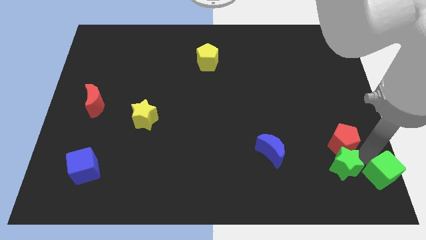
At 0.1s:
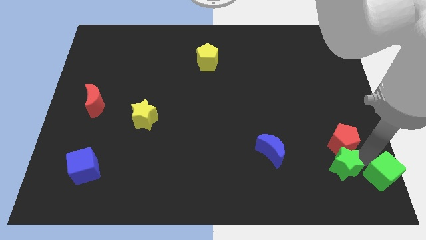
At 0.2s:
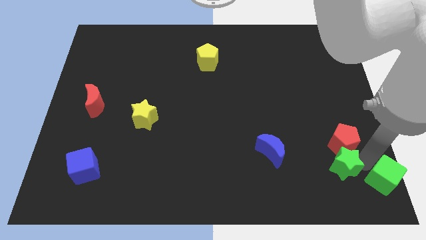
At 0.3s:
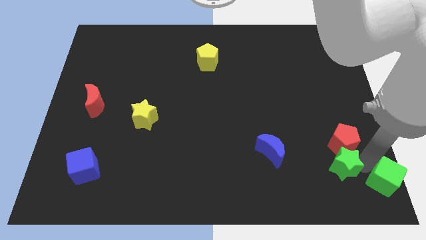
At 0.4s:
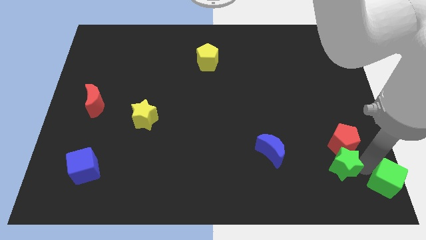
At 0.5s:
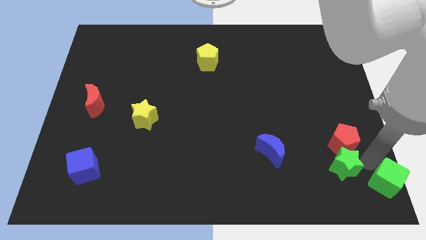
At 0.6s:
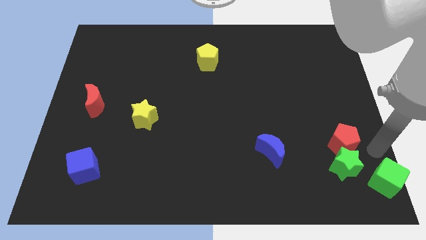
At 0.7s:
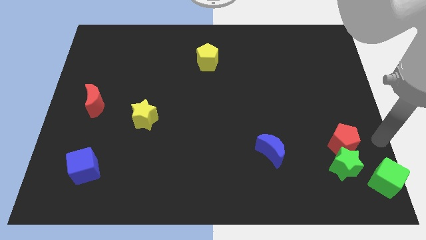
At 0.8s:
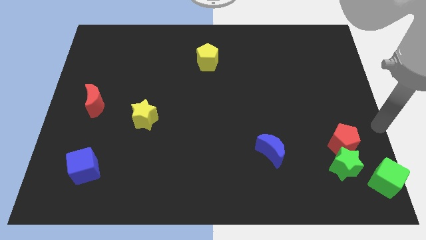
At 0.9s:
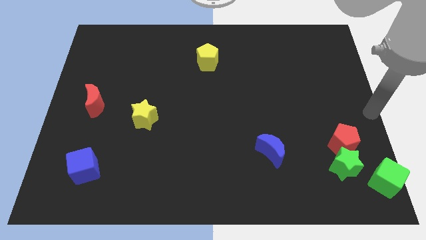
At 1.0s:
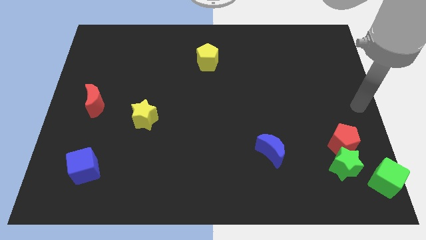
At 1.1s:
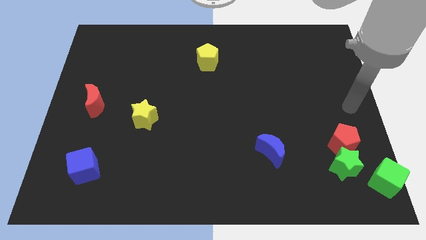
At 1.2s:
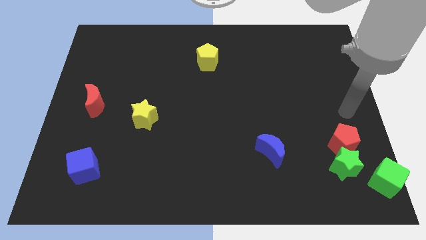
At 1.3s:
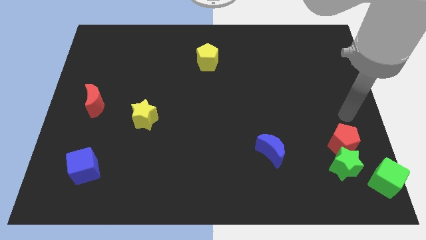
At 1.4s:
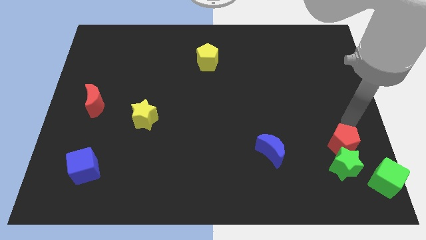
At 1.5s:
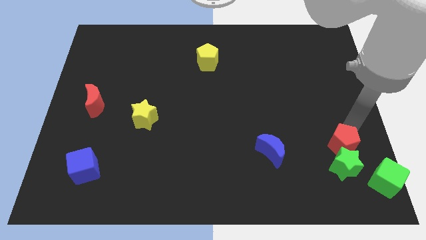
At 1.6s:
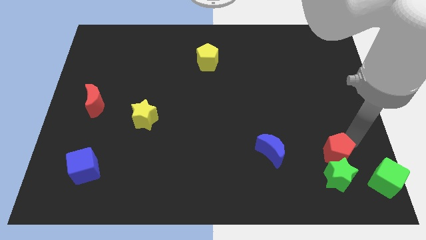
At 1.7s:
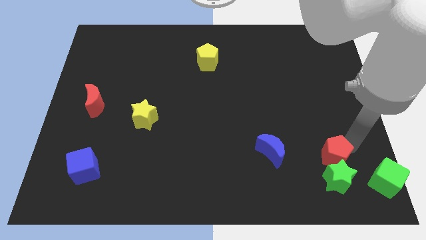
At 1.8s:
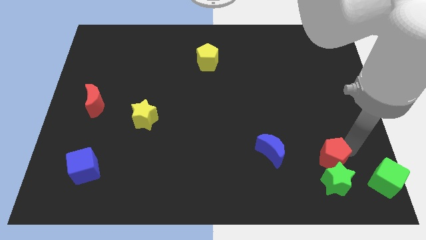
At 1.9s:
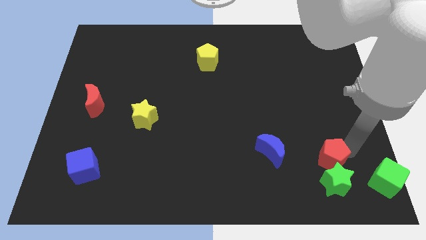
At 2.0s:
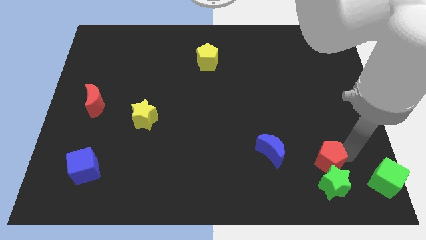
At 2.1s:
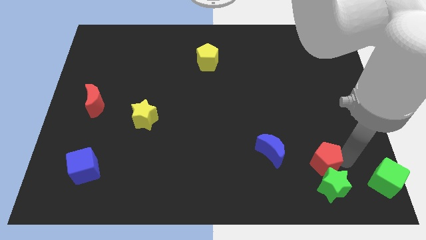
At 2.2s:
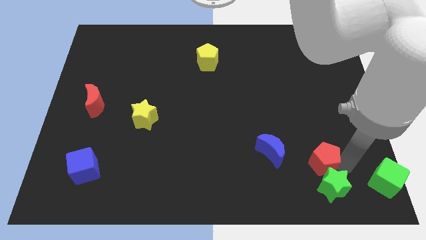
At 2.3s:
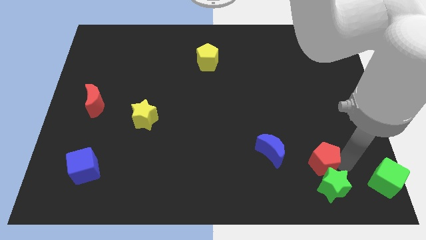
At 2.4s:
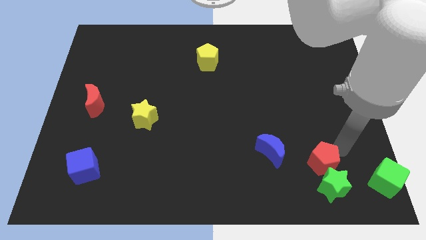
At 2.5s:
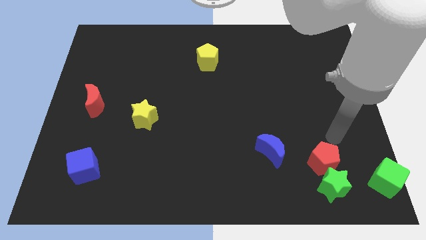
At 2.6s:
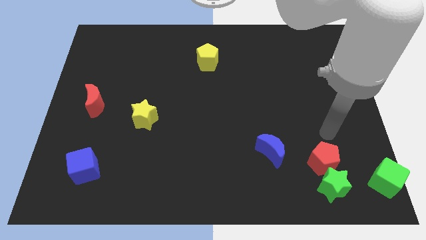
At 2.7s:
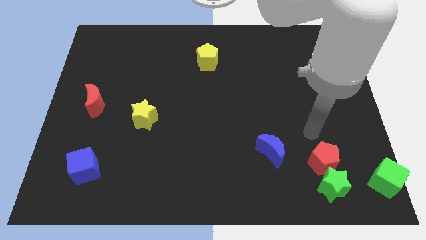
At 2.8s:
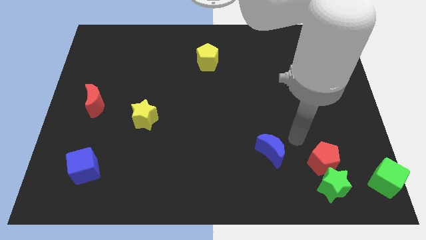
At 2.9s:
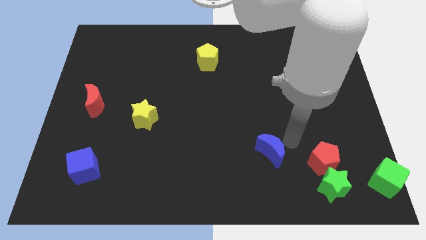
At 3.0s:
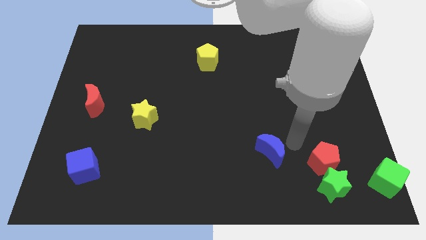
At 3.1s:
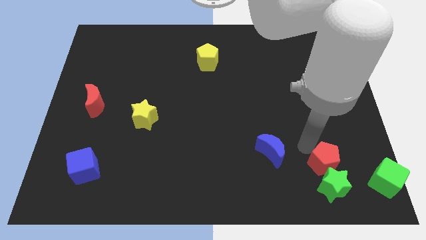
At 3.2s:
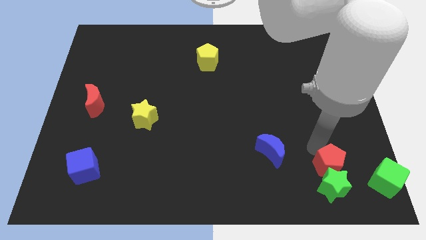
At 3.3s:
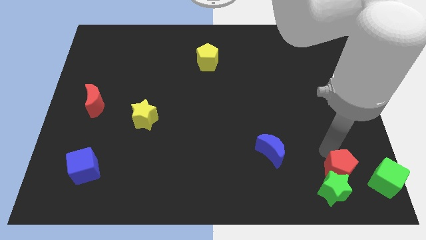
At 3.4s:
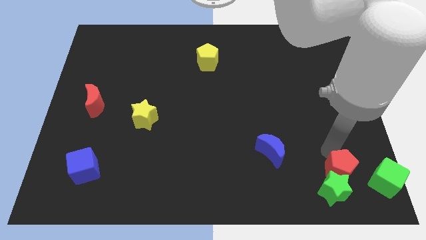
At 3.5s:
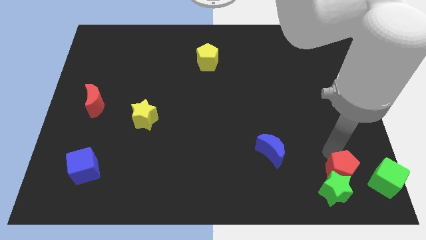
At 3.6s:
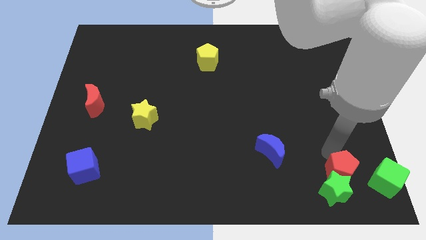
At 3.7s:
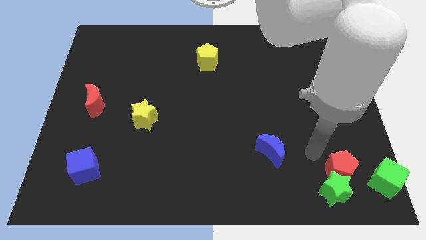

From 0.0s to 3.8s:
place the red pentagon in between the green cube and blue moon

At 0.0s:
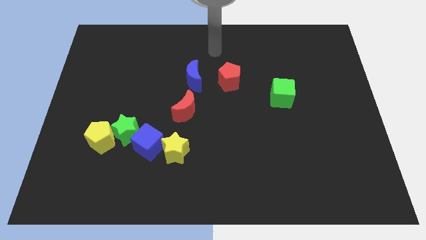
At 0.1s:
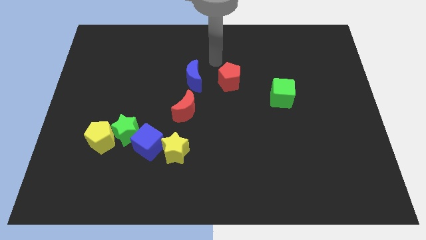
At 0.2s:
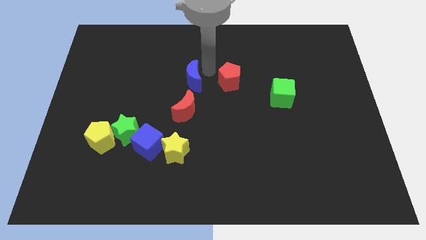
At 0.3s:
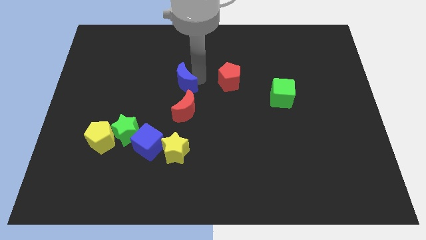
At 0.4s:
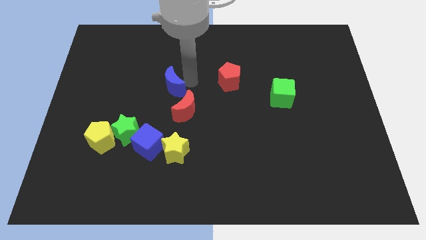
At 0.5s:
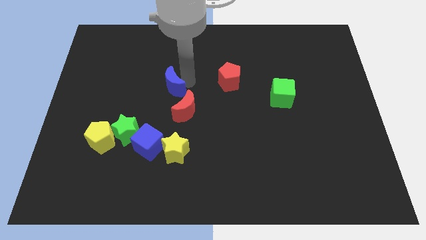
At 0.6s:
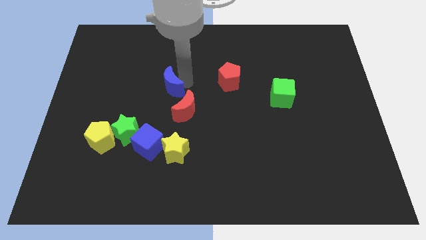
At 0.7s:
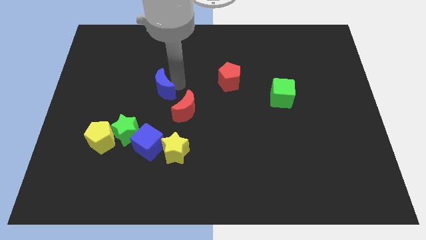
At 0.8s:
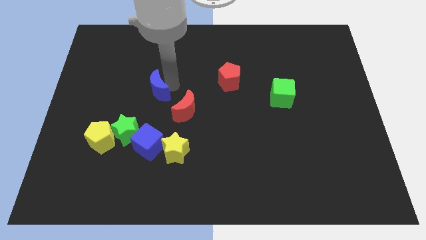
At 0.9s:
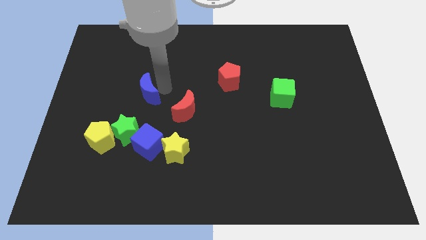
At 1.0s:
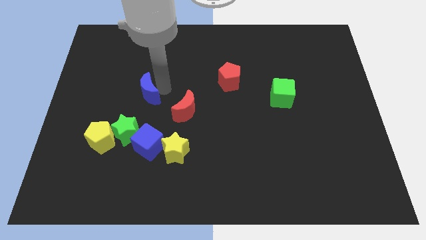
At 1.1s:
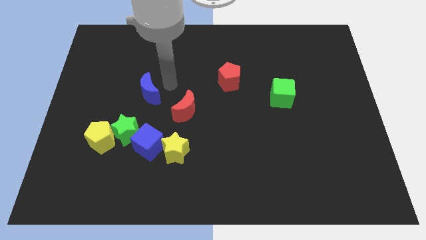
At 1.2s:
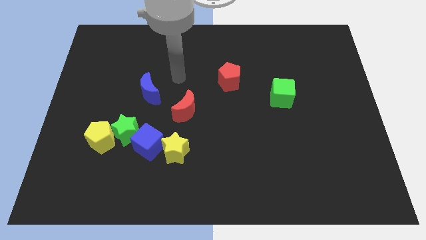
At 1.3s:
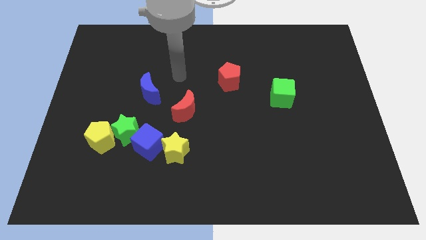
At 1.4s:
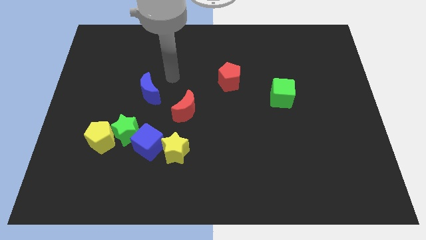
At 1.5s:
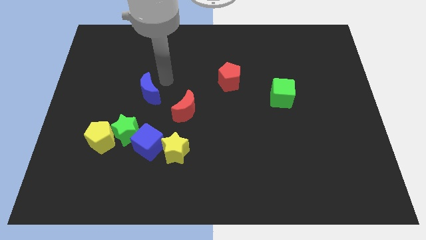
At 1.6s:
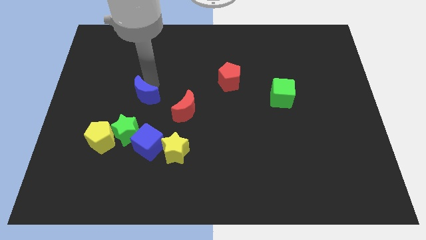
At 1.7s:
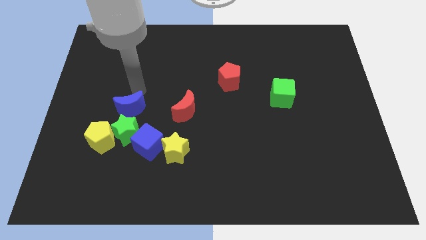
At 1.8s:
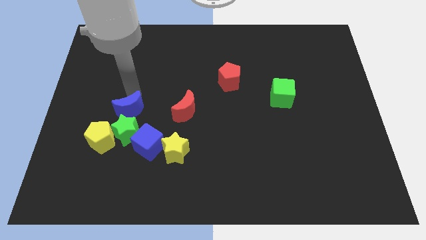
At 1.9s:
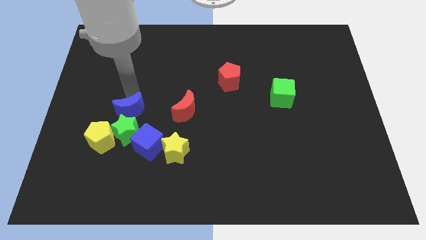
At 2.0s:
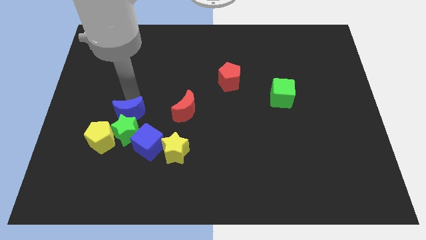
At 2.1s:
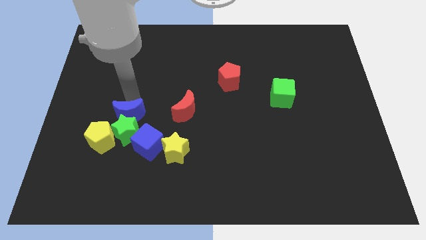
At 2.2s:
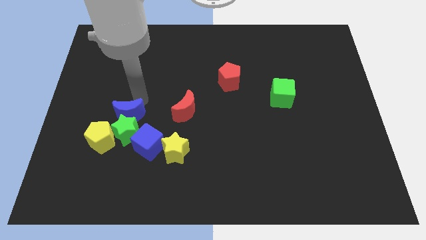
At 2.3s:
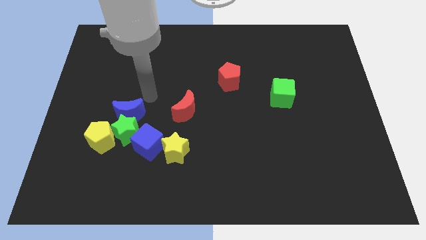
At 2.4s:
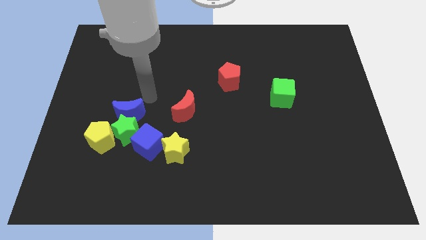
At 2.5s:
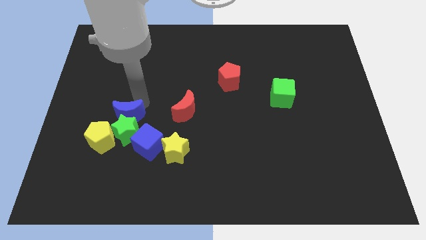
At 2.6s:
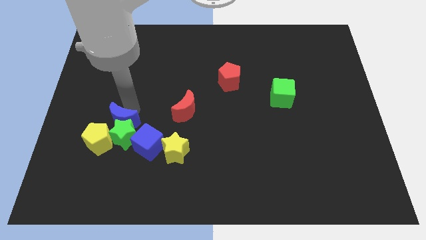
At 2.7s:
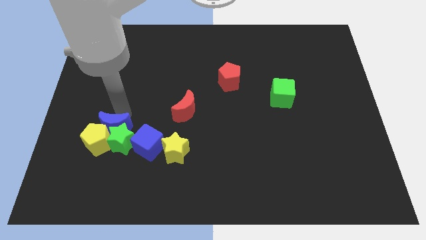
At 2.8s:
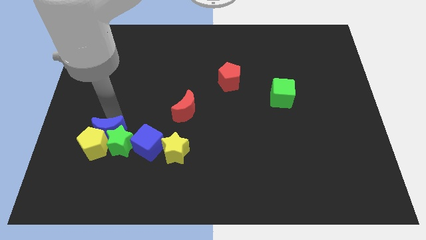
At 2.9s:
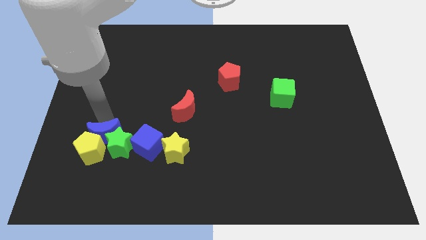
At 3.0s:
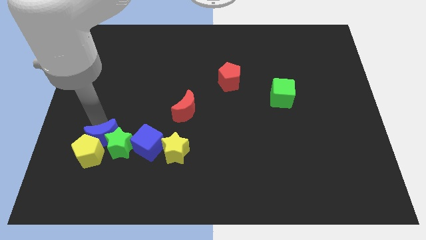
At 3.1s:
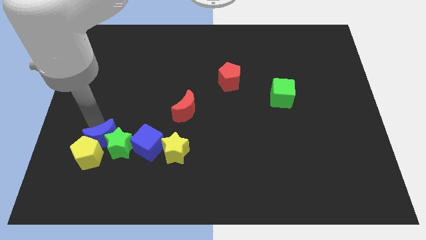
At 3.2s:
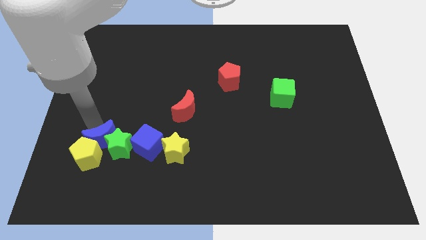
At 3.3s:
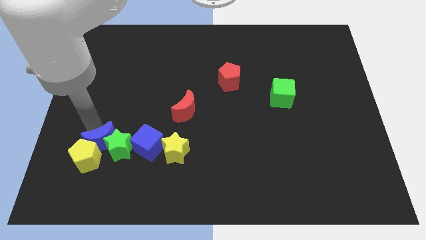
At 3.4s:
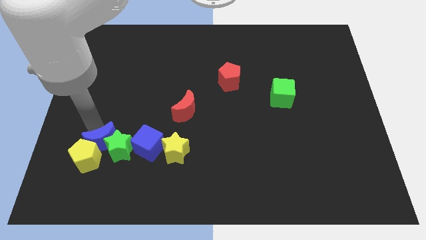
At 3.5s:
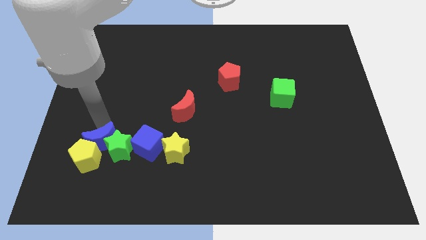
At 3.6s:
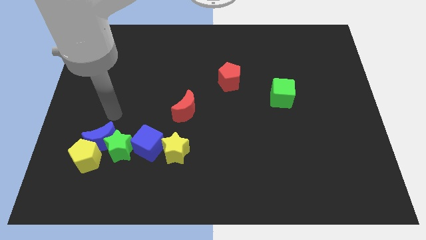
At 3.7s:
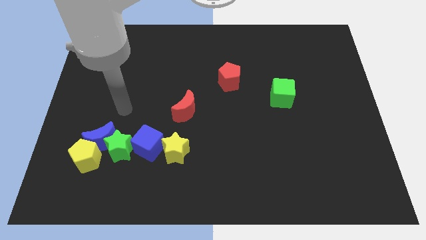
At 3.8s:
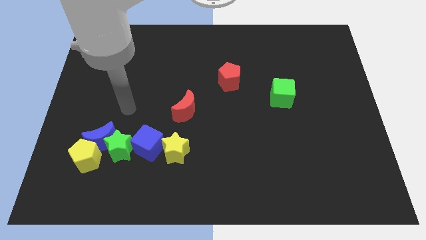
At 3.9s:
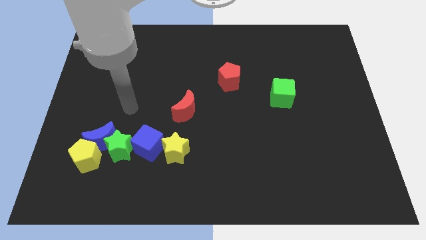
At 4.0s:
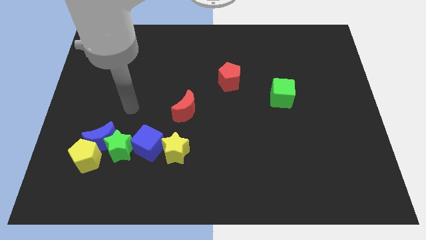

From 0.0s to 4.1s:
push the blue crescent into the yellow pentagon and green star

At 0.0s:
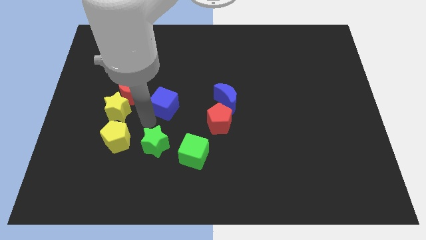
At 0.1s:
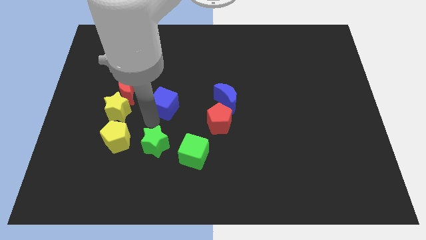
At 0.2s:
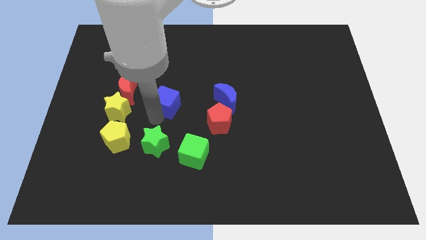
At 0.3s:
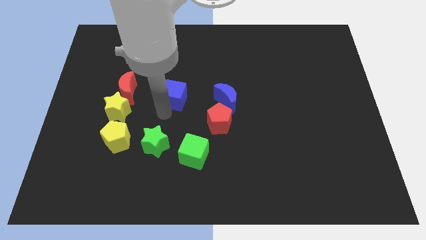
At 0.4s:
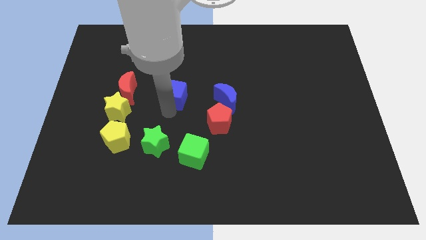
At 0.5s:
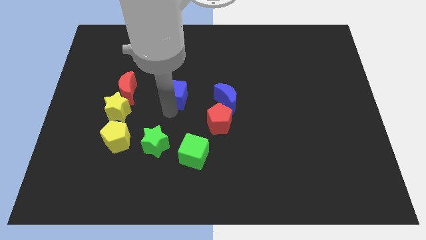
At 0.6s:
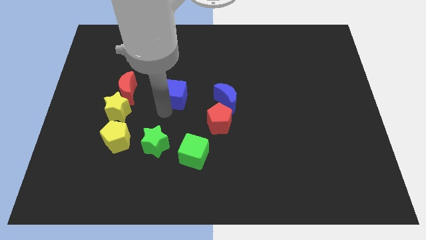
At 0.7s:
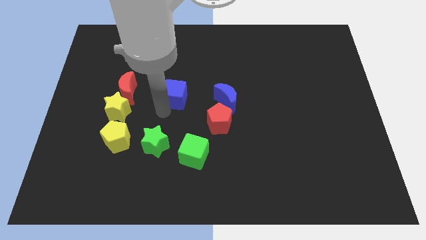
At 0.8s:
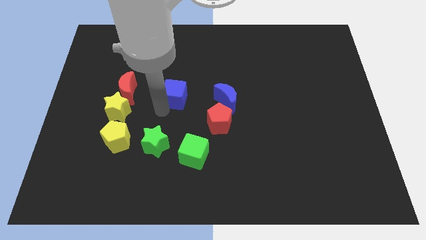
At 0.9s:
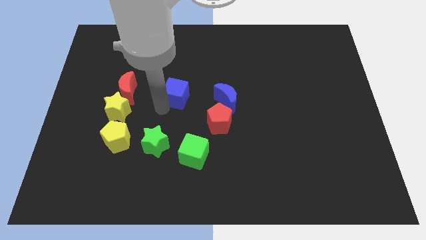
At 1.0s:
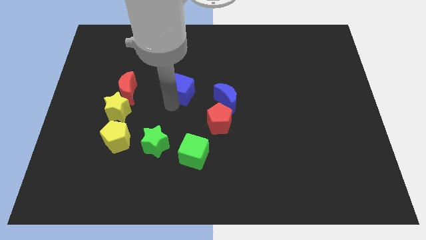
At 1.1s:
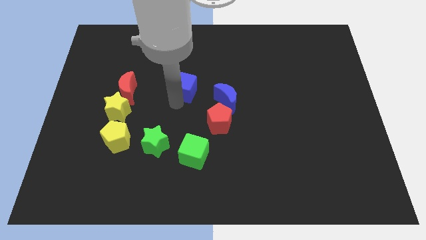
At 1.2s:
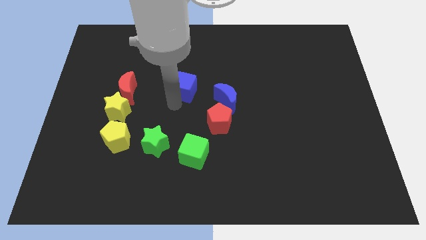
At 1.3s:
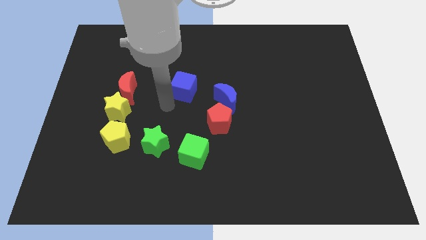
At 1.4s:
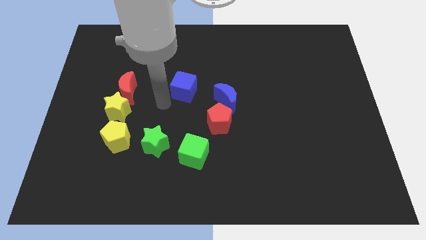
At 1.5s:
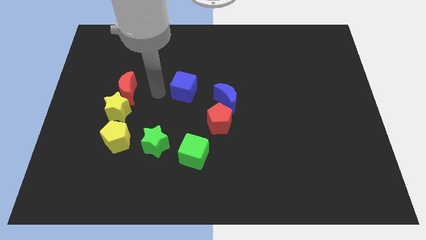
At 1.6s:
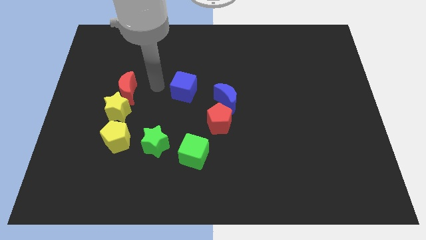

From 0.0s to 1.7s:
move the blue cube away from the green star
